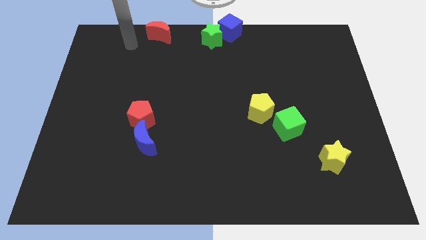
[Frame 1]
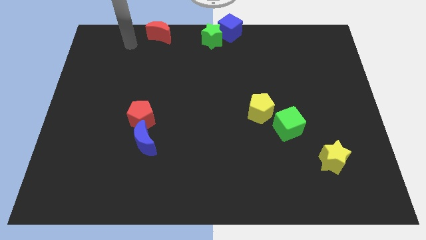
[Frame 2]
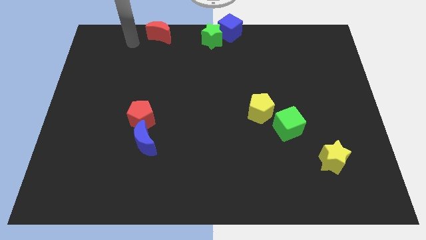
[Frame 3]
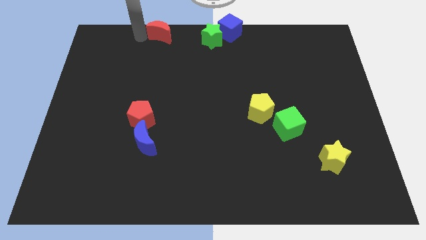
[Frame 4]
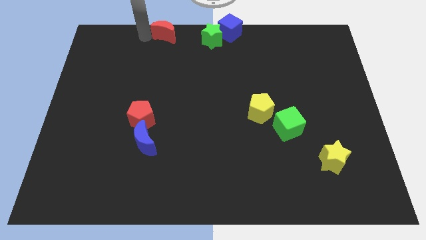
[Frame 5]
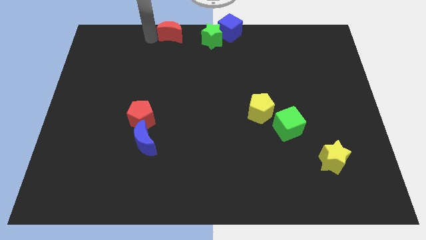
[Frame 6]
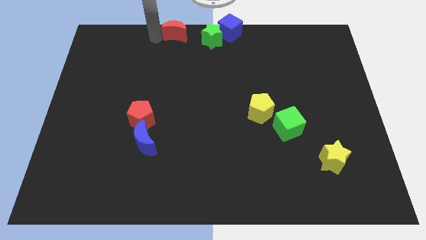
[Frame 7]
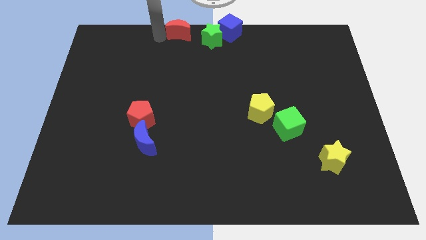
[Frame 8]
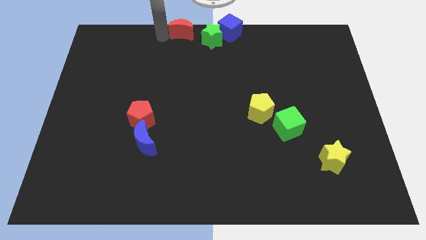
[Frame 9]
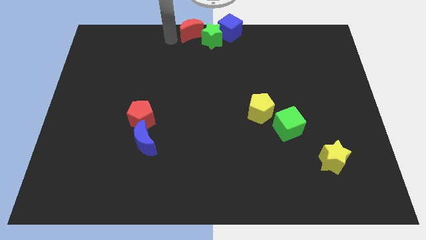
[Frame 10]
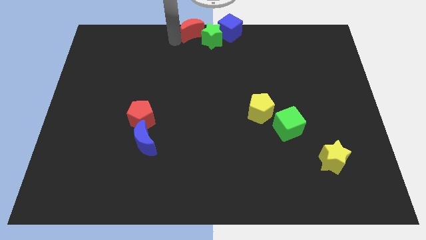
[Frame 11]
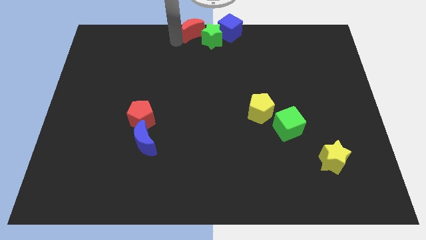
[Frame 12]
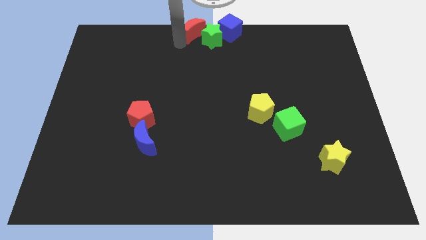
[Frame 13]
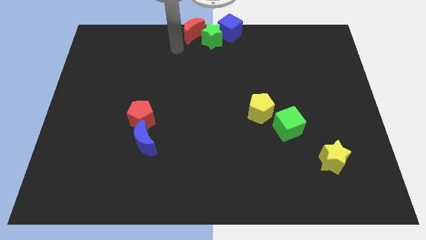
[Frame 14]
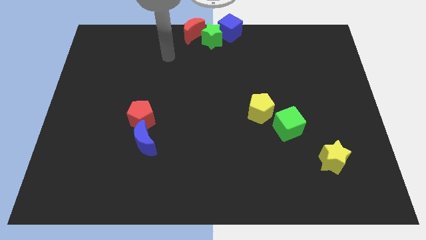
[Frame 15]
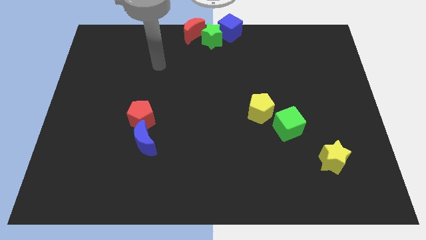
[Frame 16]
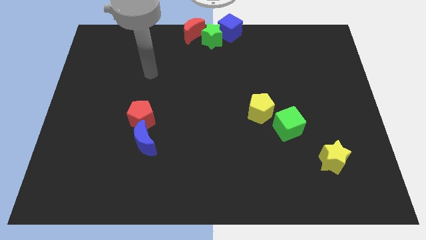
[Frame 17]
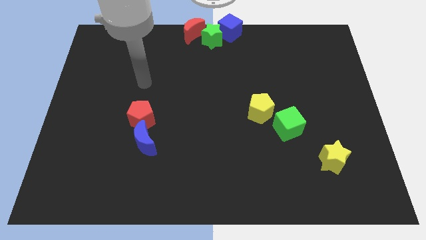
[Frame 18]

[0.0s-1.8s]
place the red moon to the left side of green star

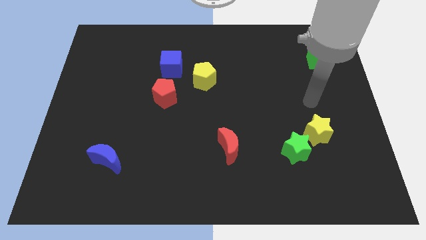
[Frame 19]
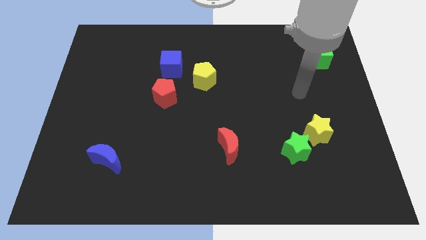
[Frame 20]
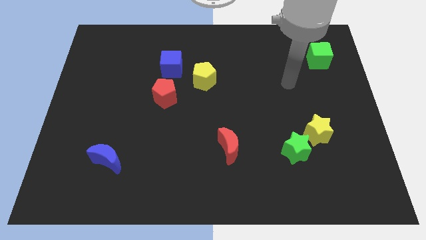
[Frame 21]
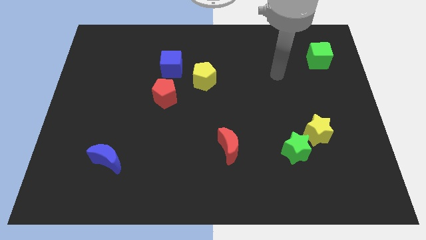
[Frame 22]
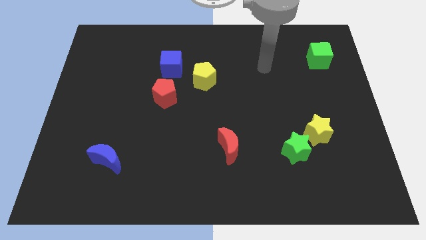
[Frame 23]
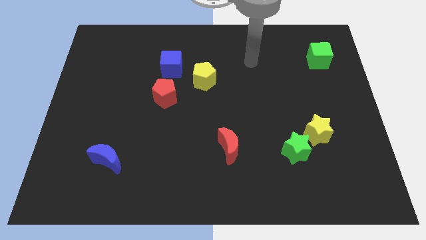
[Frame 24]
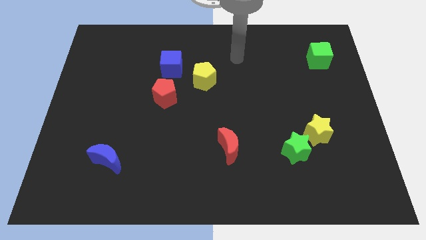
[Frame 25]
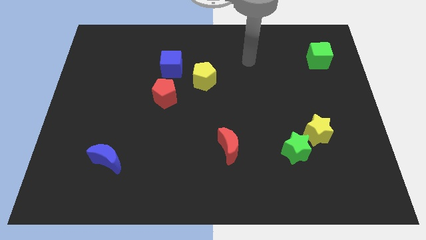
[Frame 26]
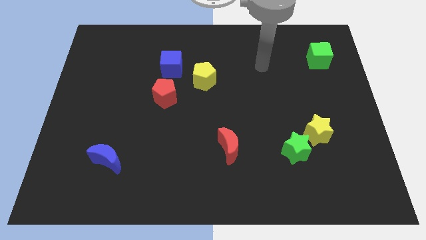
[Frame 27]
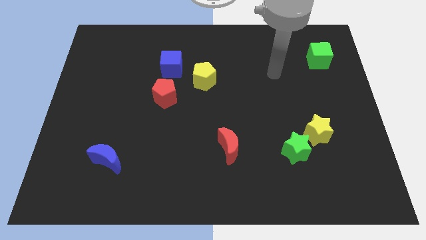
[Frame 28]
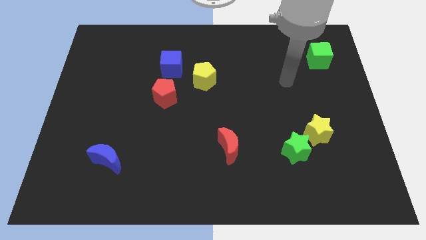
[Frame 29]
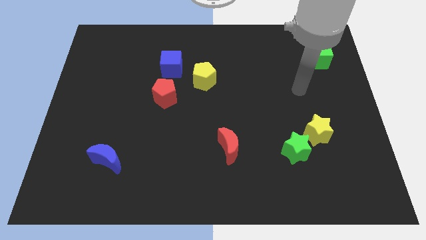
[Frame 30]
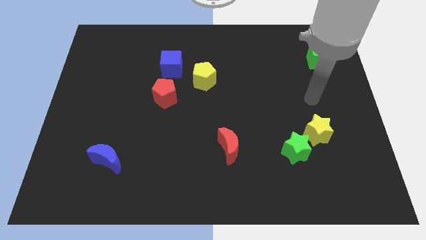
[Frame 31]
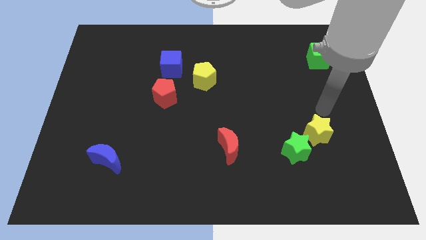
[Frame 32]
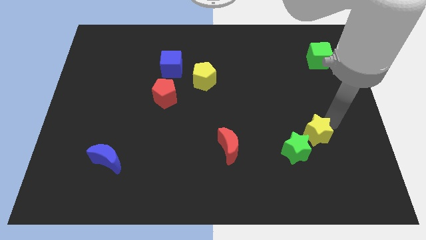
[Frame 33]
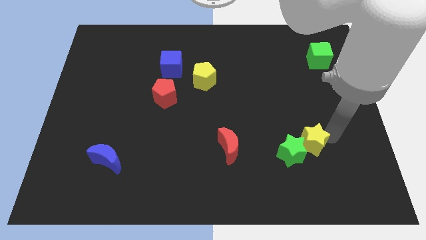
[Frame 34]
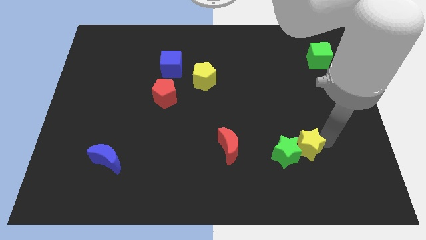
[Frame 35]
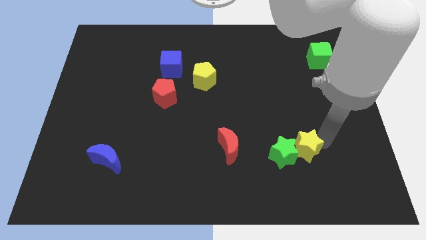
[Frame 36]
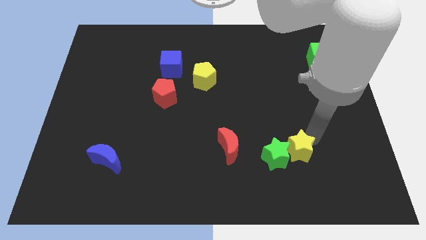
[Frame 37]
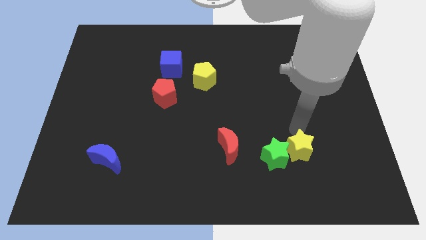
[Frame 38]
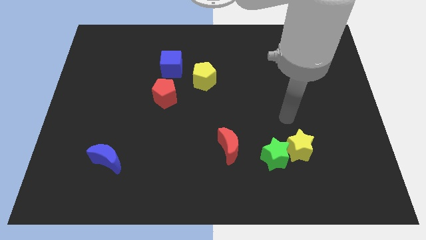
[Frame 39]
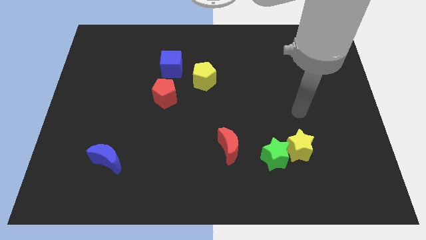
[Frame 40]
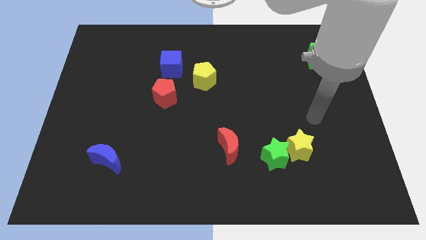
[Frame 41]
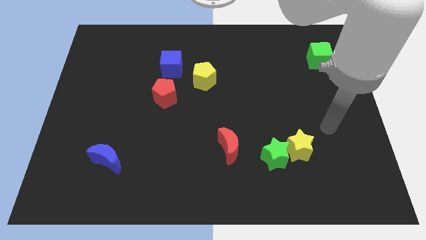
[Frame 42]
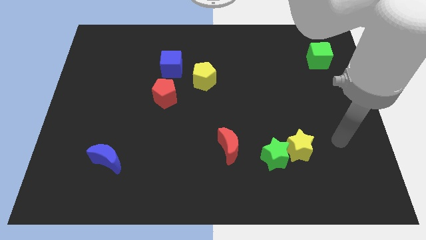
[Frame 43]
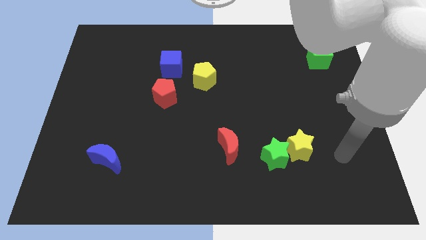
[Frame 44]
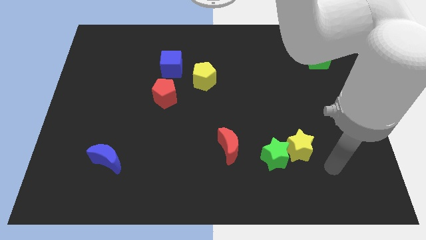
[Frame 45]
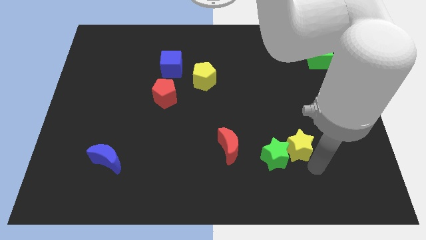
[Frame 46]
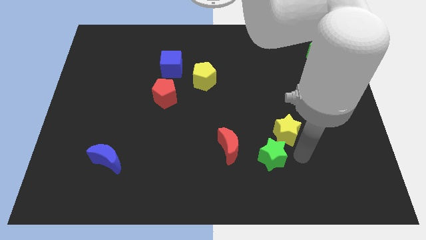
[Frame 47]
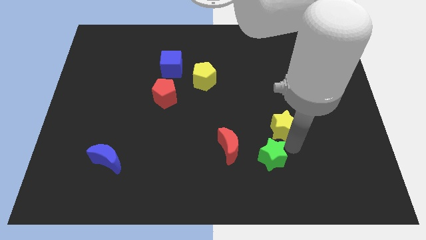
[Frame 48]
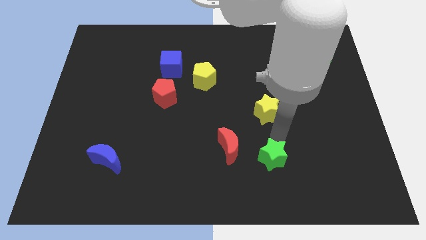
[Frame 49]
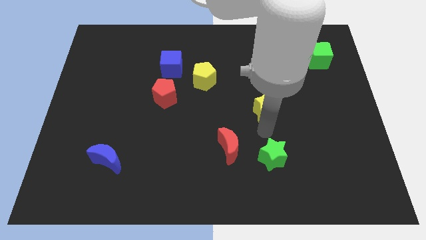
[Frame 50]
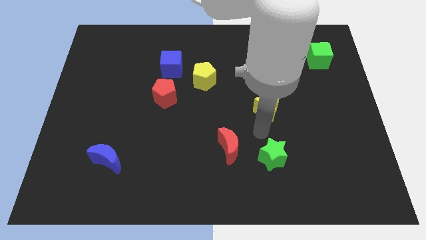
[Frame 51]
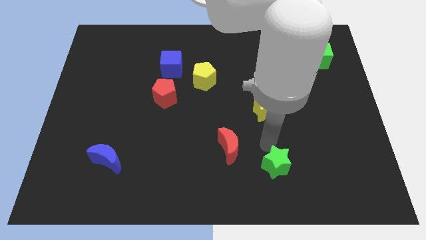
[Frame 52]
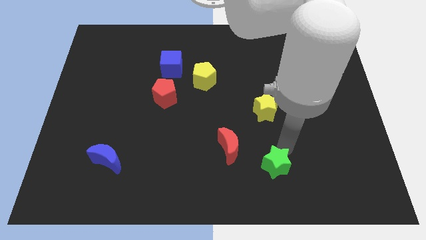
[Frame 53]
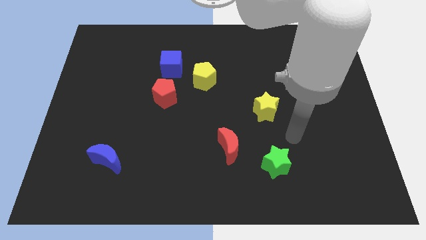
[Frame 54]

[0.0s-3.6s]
separate the yellow star from the green star

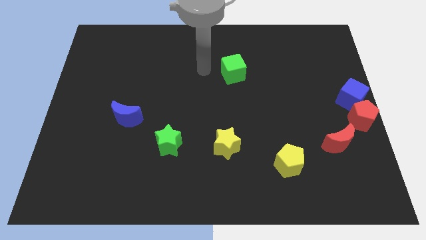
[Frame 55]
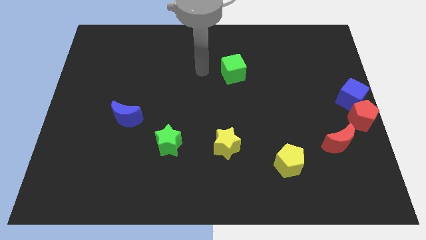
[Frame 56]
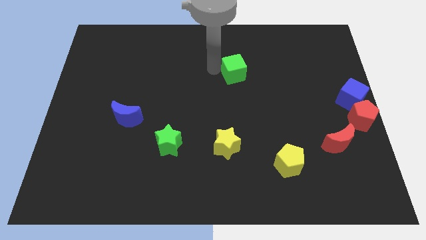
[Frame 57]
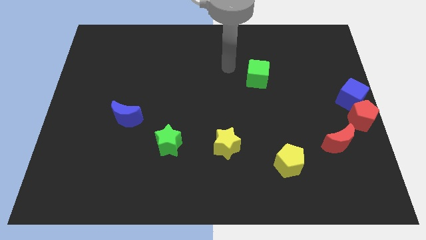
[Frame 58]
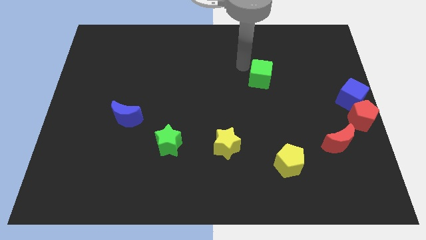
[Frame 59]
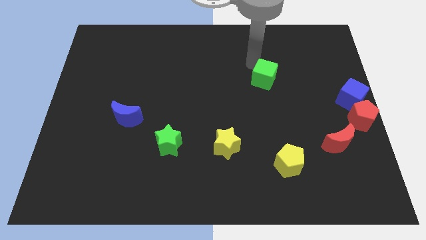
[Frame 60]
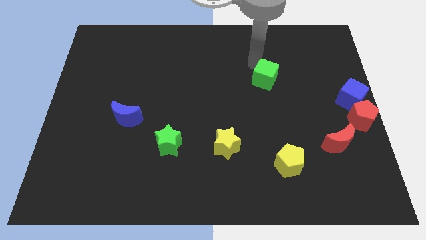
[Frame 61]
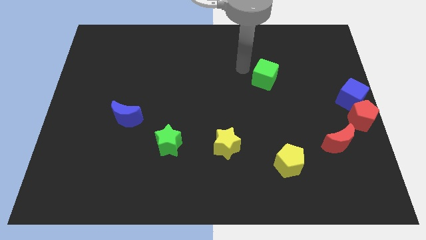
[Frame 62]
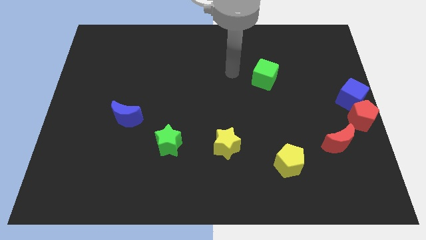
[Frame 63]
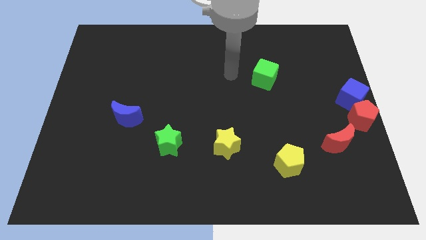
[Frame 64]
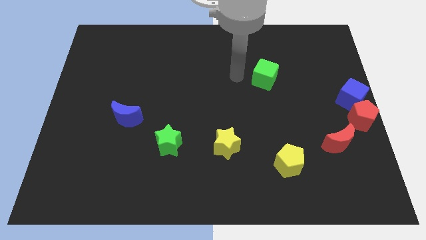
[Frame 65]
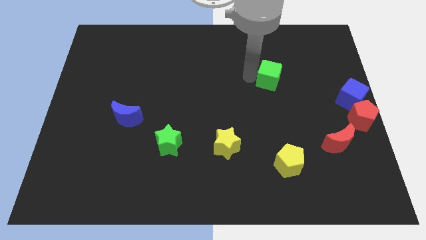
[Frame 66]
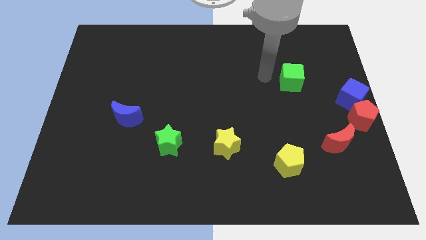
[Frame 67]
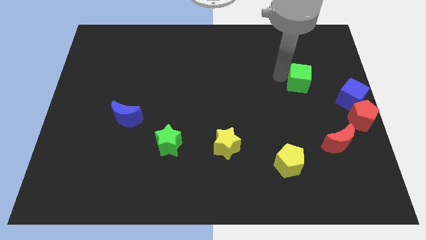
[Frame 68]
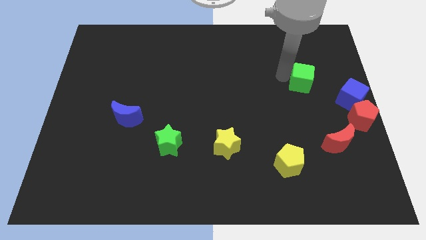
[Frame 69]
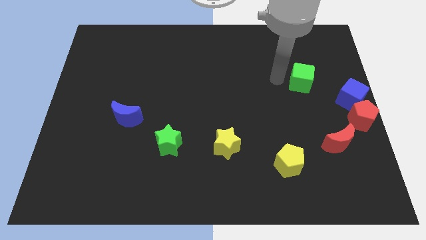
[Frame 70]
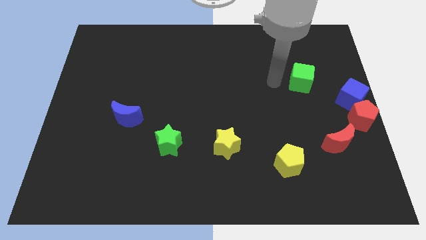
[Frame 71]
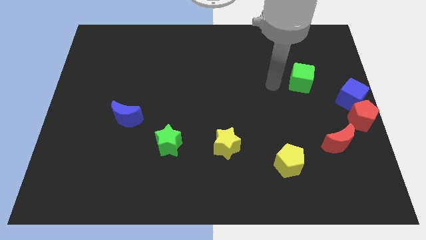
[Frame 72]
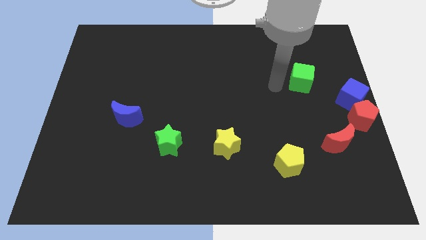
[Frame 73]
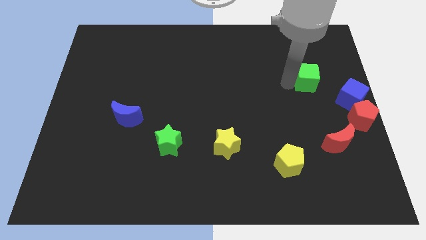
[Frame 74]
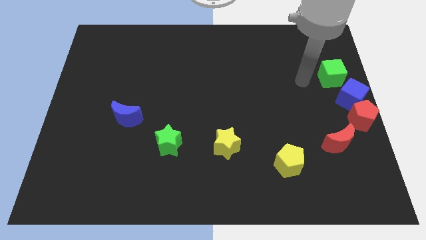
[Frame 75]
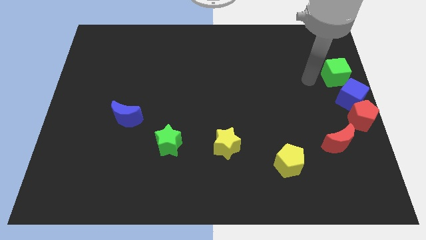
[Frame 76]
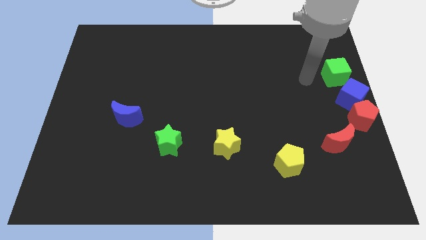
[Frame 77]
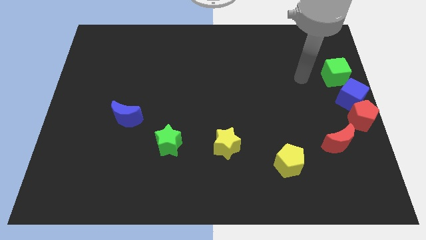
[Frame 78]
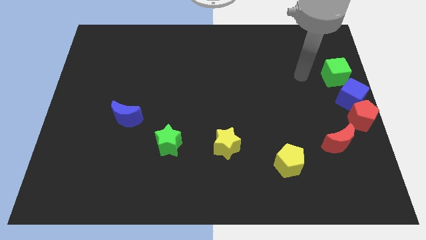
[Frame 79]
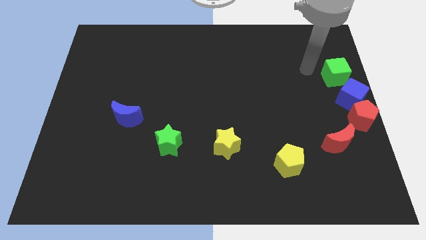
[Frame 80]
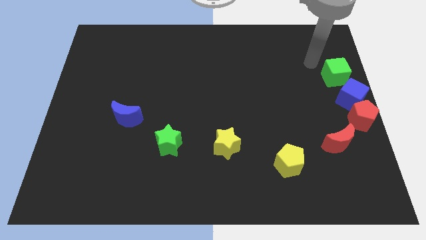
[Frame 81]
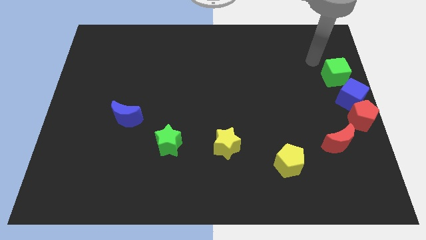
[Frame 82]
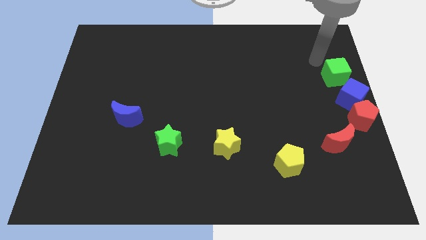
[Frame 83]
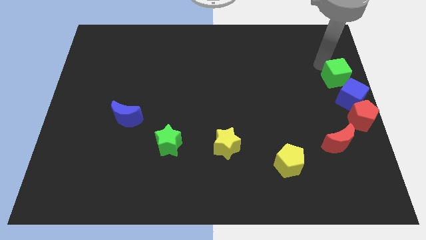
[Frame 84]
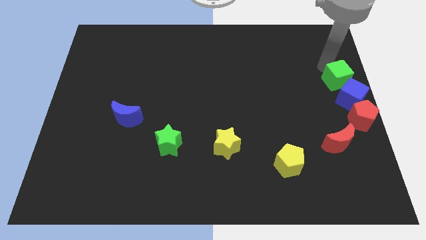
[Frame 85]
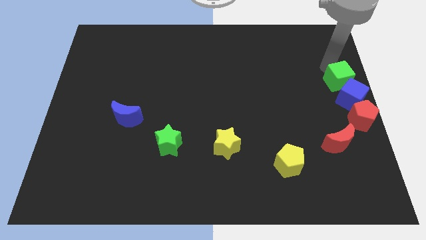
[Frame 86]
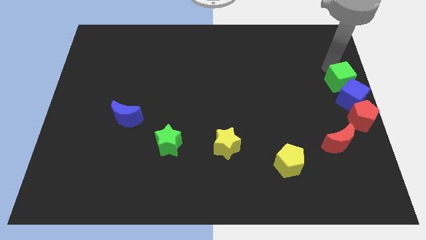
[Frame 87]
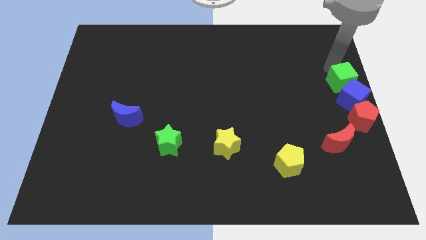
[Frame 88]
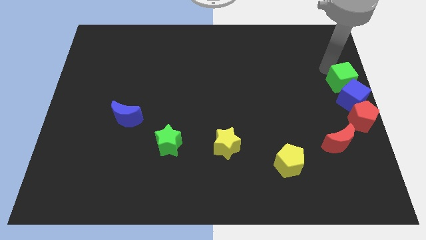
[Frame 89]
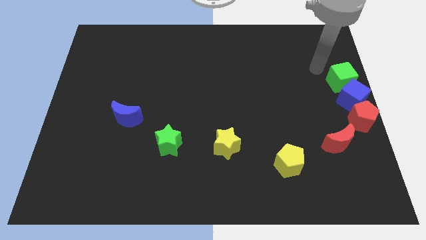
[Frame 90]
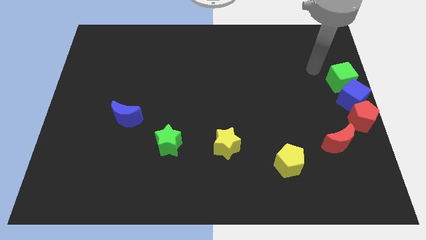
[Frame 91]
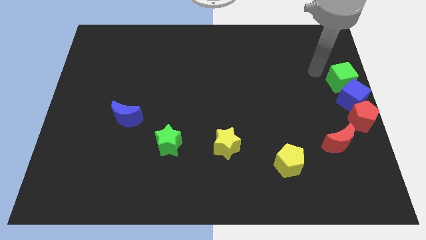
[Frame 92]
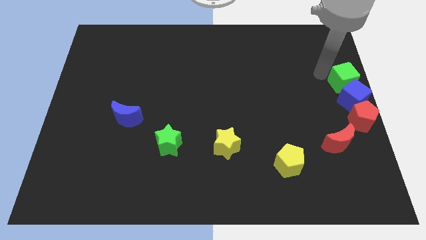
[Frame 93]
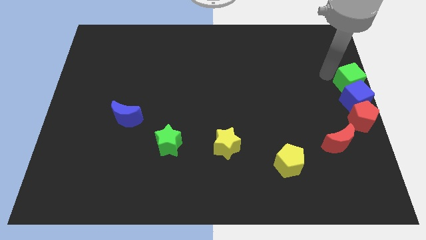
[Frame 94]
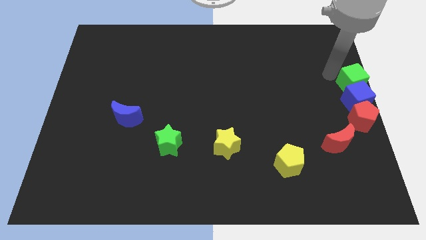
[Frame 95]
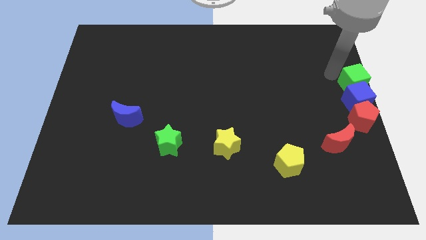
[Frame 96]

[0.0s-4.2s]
place the green cube above the blue cube
